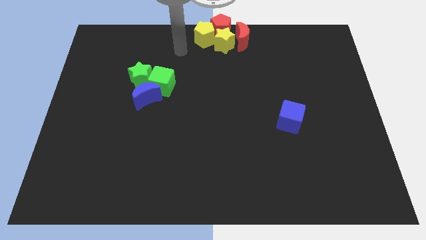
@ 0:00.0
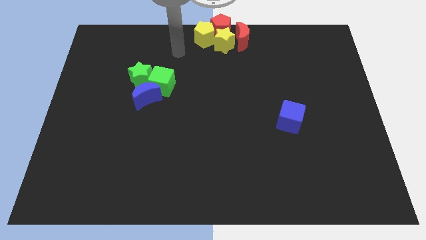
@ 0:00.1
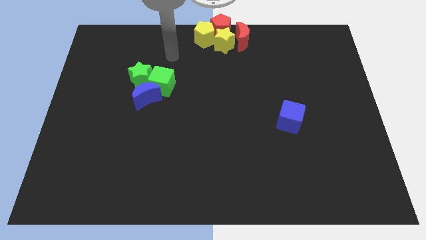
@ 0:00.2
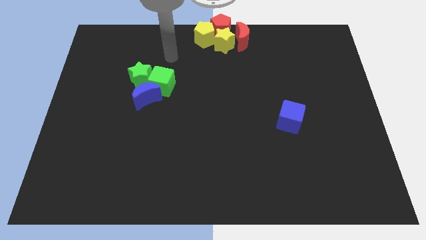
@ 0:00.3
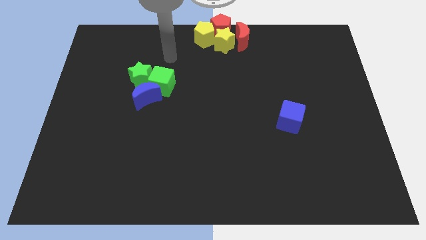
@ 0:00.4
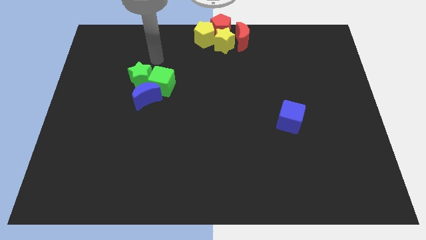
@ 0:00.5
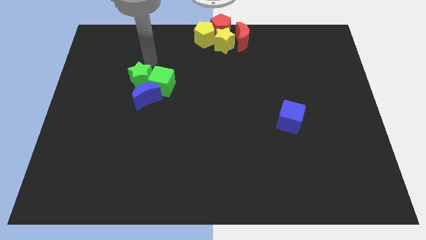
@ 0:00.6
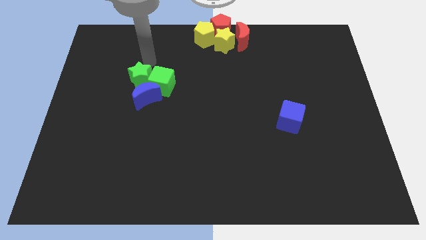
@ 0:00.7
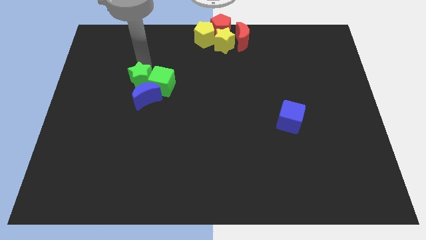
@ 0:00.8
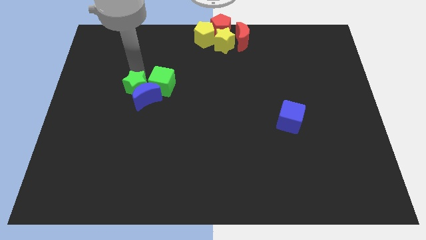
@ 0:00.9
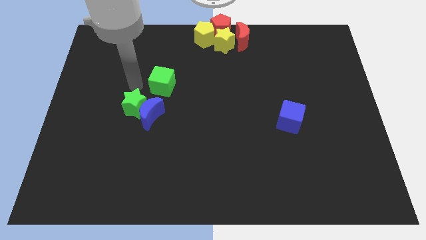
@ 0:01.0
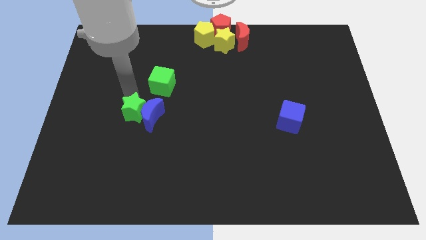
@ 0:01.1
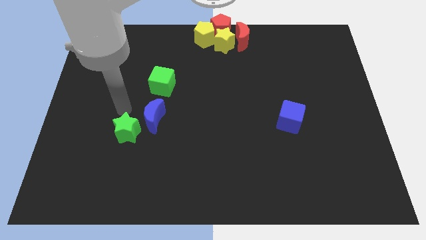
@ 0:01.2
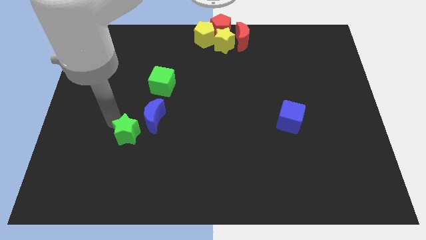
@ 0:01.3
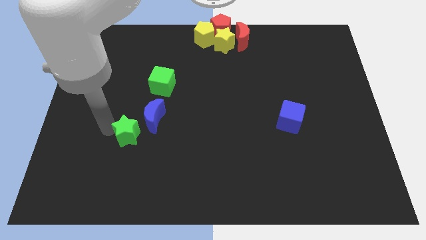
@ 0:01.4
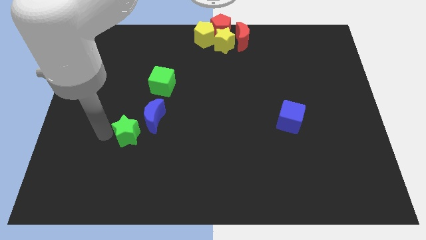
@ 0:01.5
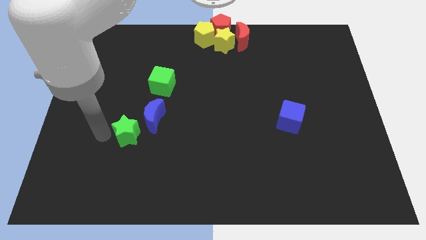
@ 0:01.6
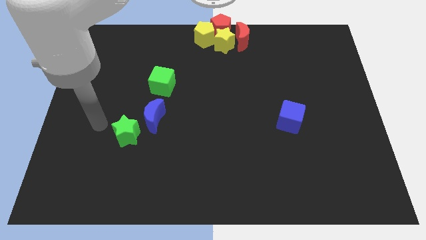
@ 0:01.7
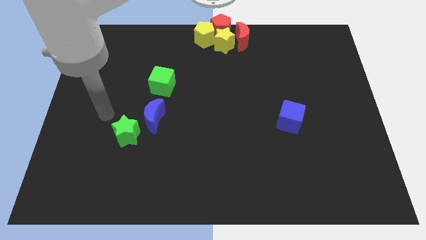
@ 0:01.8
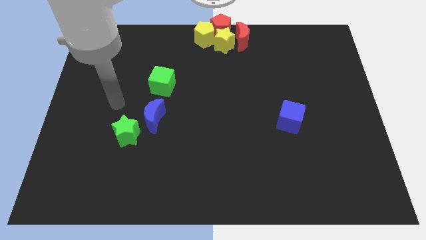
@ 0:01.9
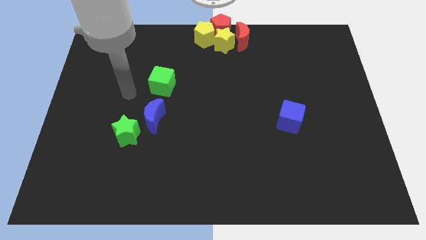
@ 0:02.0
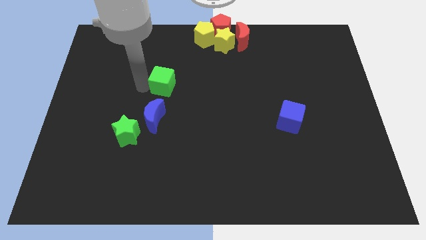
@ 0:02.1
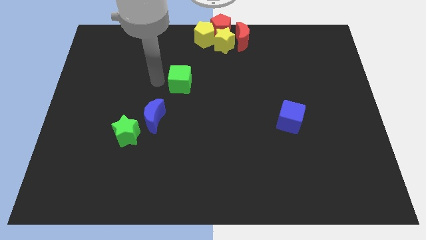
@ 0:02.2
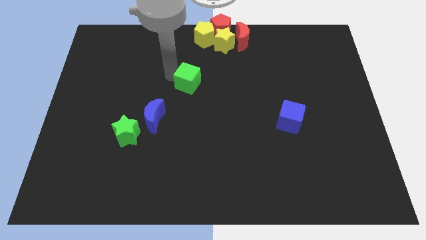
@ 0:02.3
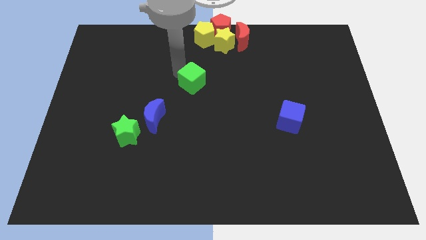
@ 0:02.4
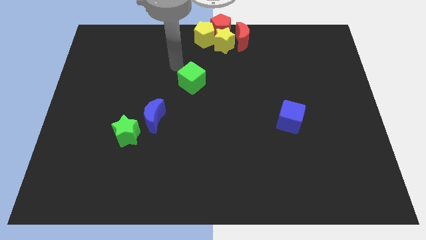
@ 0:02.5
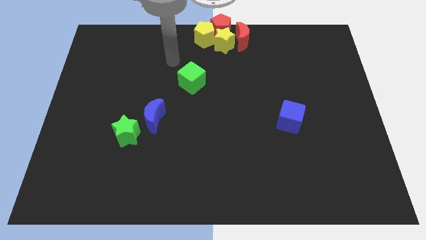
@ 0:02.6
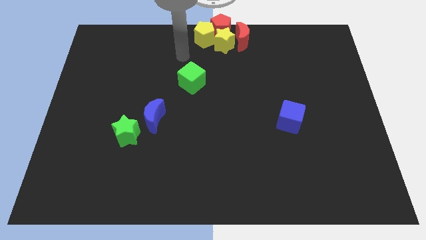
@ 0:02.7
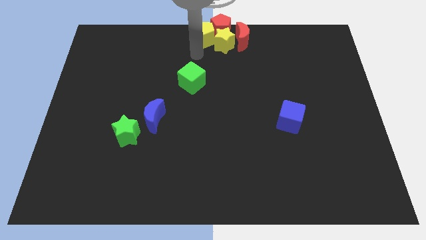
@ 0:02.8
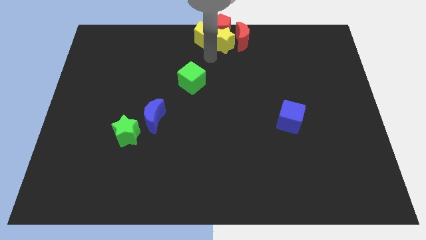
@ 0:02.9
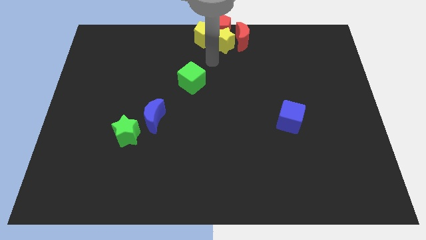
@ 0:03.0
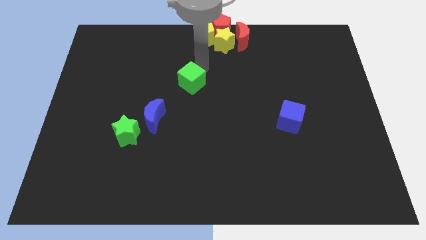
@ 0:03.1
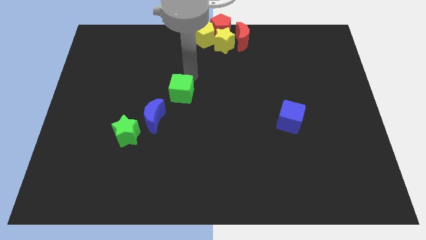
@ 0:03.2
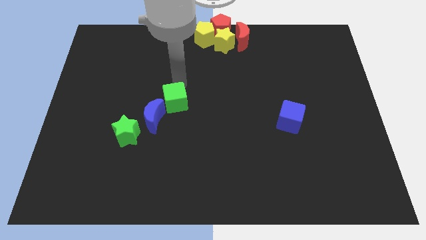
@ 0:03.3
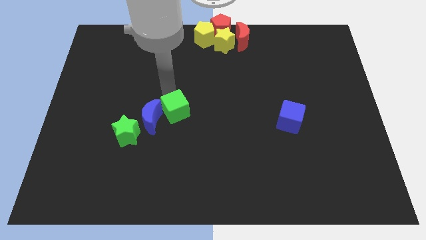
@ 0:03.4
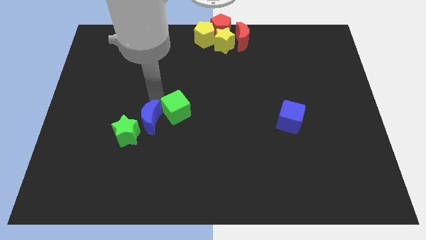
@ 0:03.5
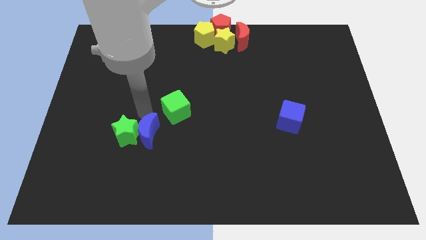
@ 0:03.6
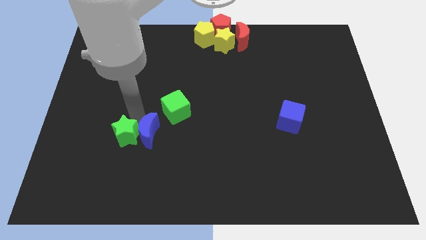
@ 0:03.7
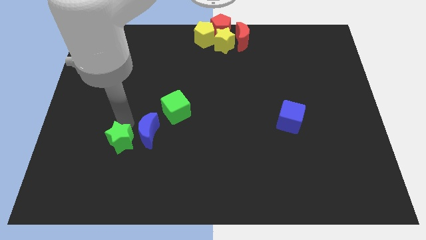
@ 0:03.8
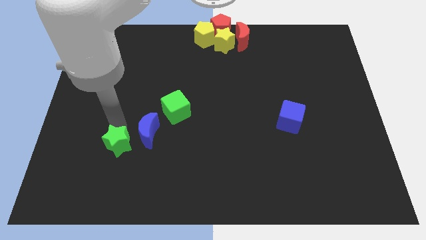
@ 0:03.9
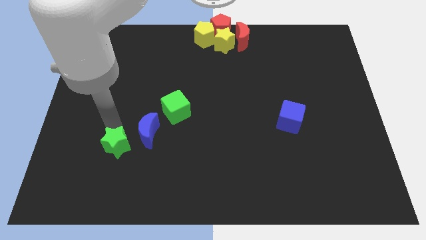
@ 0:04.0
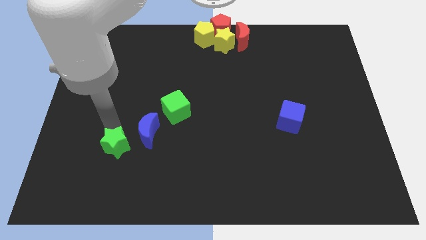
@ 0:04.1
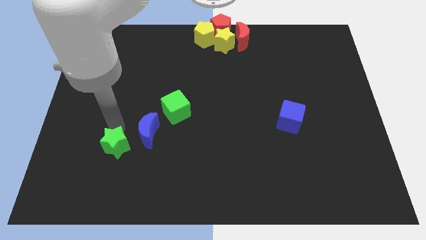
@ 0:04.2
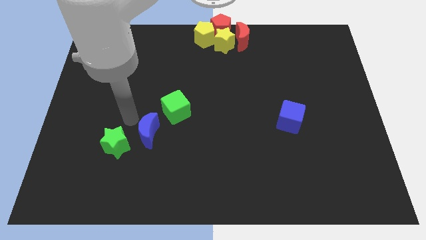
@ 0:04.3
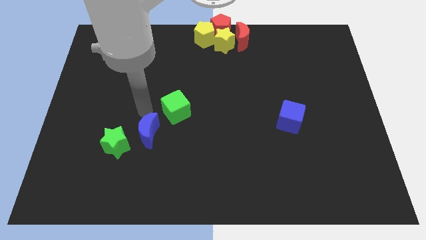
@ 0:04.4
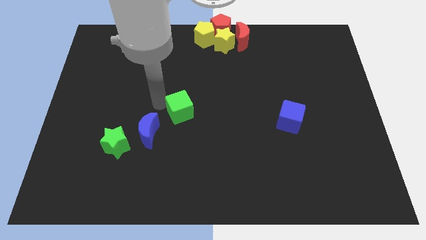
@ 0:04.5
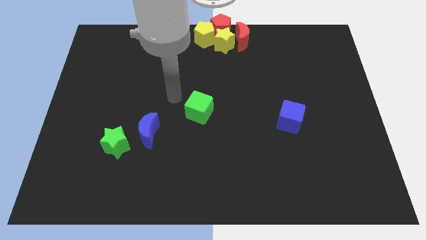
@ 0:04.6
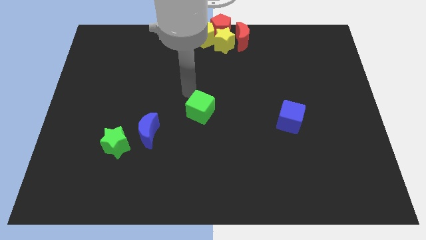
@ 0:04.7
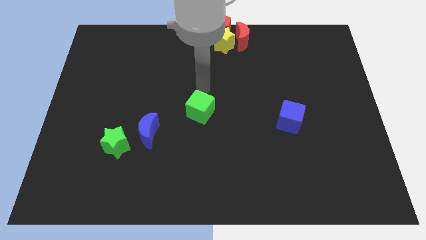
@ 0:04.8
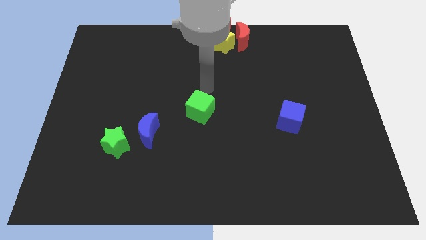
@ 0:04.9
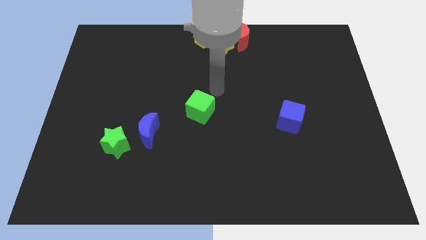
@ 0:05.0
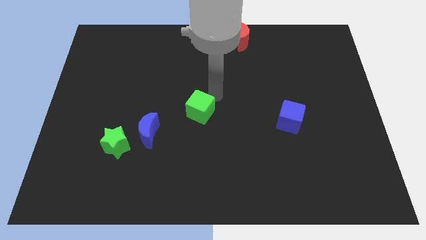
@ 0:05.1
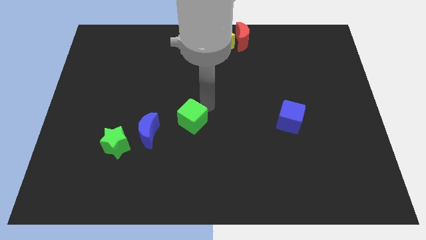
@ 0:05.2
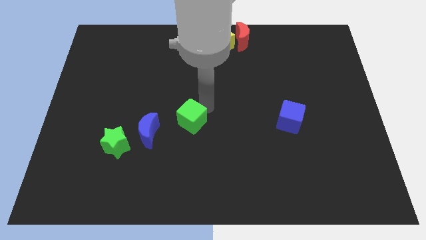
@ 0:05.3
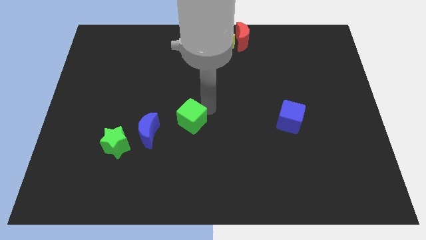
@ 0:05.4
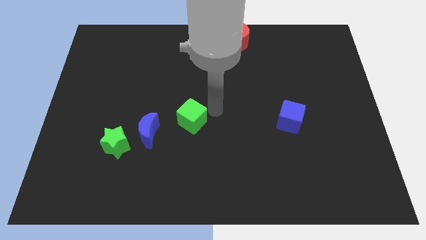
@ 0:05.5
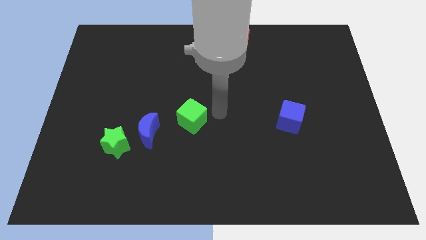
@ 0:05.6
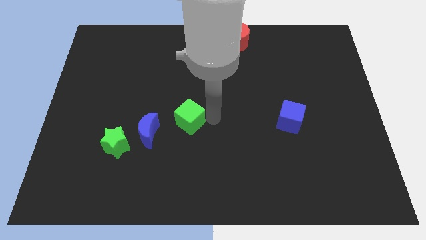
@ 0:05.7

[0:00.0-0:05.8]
move the green cube to the center of the board

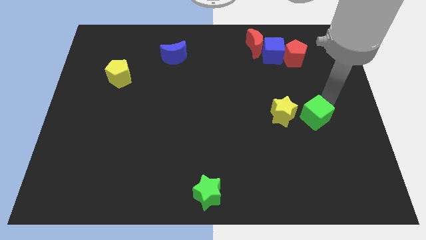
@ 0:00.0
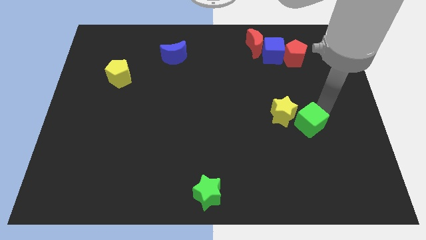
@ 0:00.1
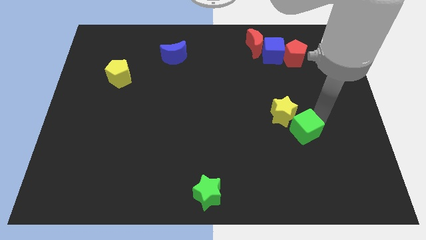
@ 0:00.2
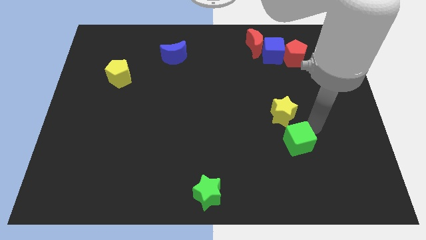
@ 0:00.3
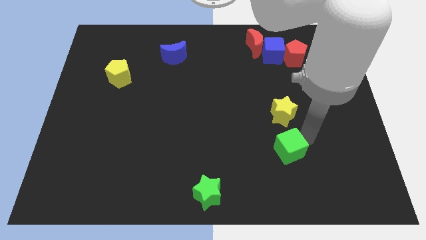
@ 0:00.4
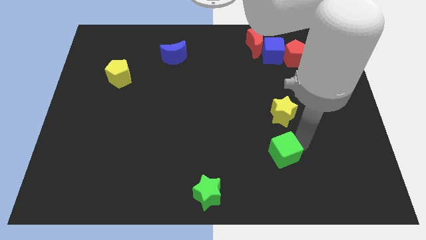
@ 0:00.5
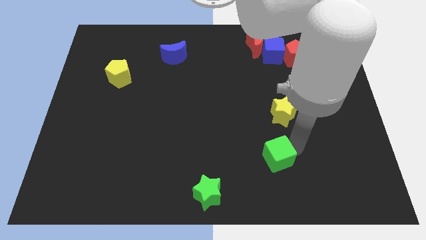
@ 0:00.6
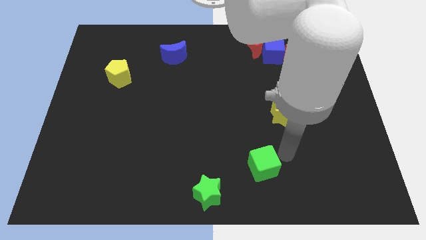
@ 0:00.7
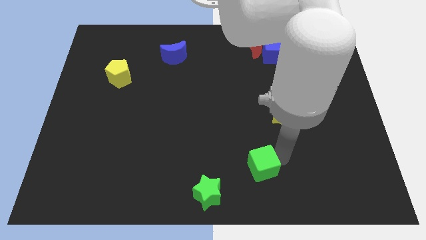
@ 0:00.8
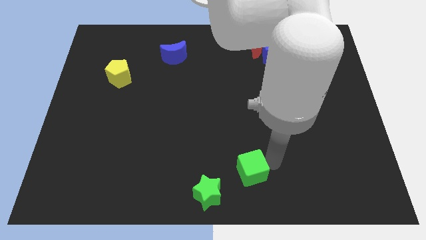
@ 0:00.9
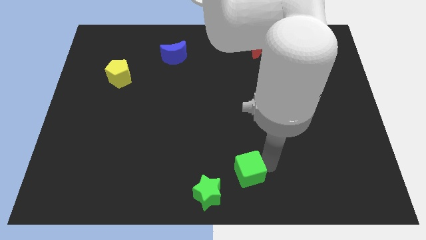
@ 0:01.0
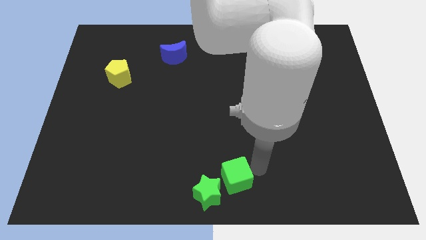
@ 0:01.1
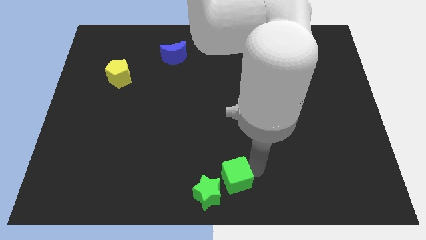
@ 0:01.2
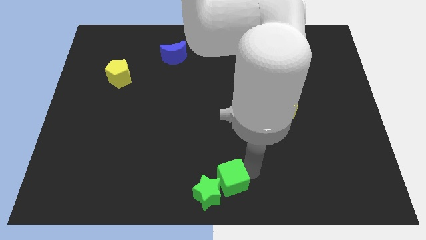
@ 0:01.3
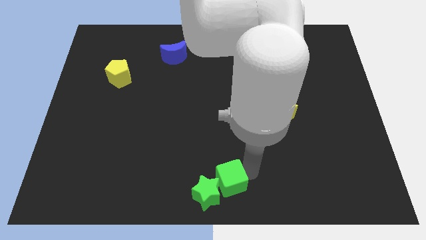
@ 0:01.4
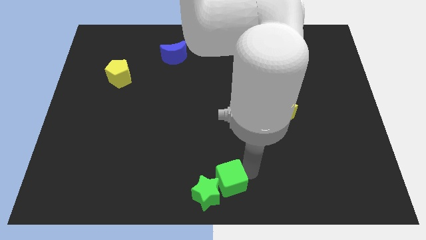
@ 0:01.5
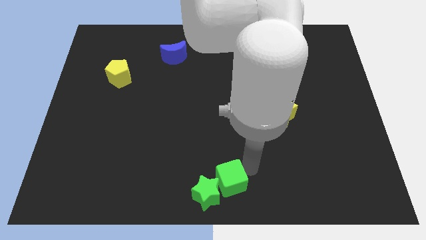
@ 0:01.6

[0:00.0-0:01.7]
push the green cube into the green star

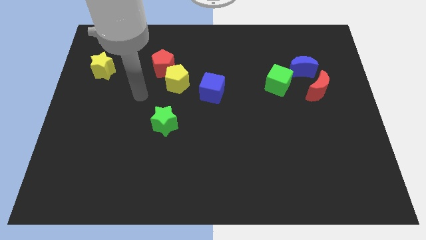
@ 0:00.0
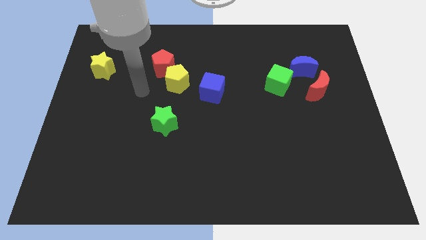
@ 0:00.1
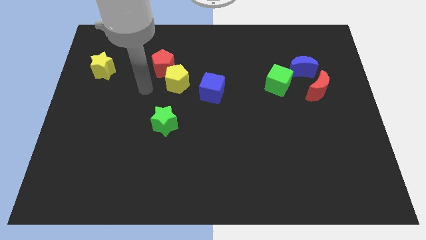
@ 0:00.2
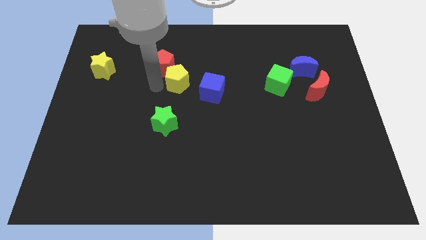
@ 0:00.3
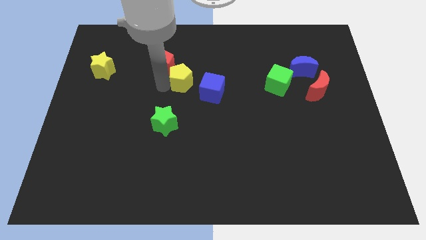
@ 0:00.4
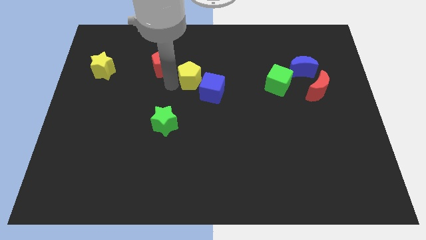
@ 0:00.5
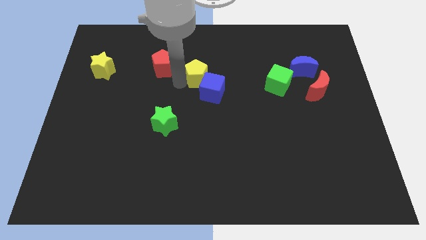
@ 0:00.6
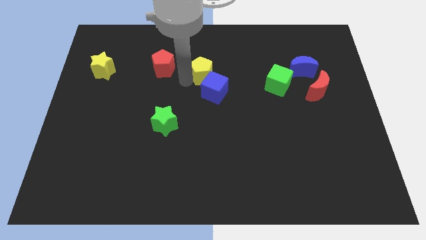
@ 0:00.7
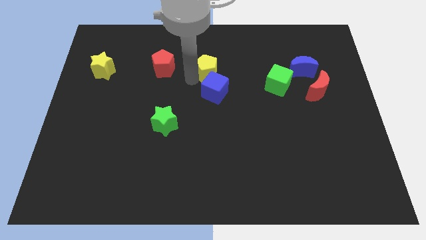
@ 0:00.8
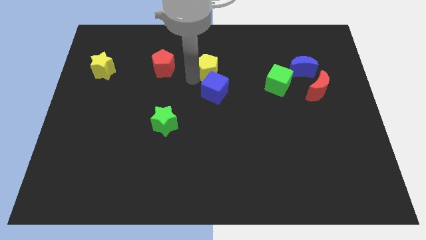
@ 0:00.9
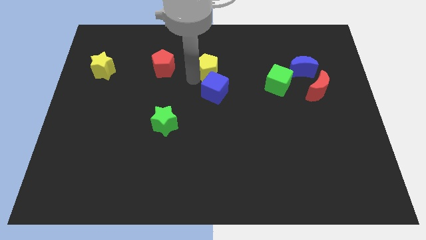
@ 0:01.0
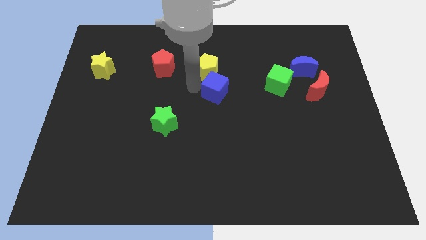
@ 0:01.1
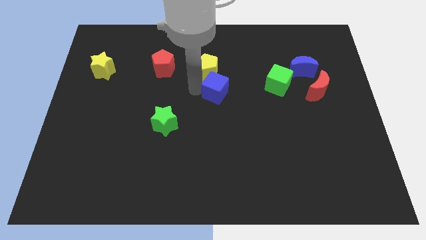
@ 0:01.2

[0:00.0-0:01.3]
push the yellow pentagon to the top side of the blue cube

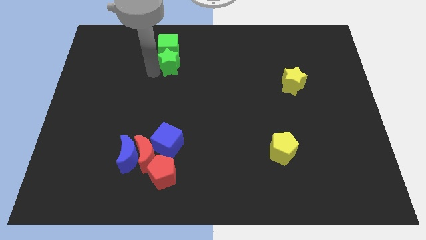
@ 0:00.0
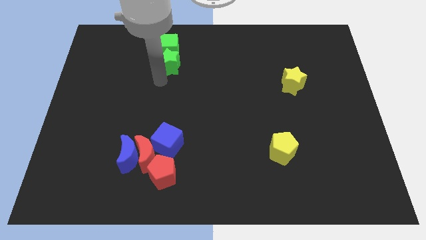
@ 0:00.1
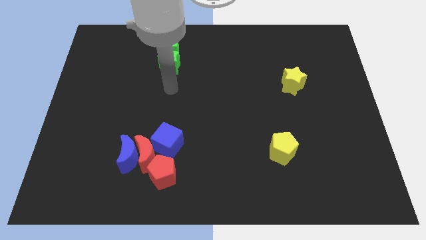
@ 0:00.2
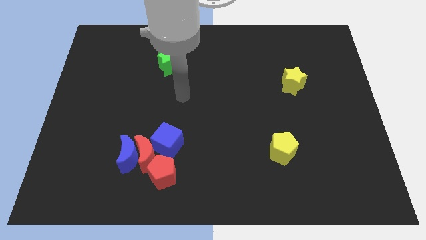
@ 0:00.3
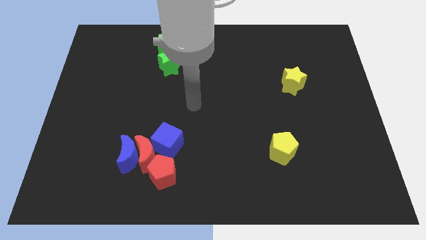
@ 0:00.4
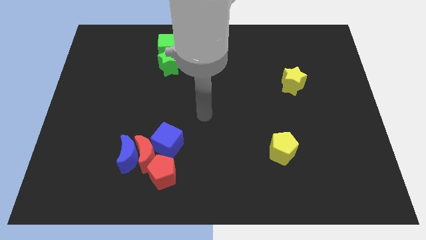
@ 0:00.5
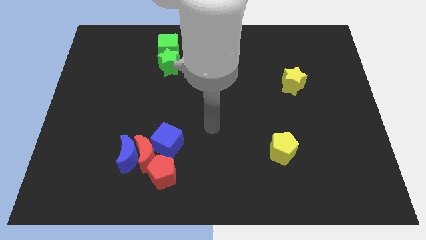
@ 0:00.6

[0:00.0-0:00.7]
move the arm towards the centre of the board
